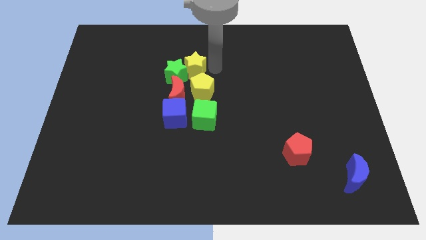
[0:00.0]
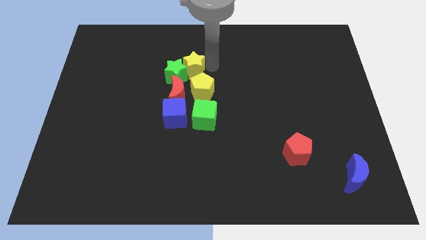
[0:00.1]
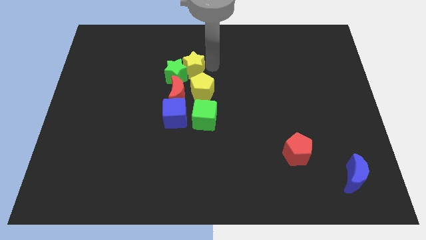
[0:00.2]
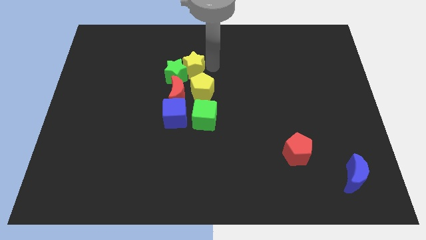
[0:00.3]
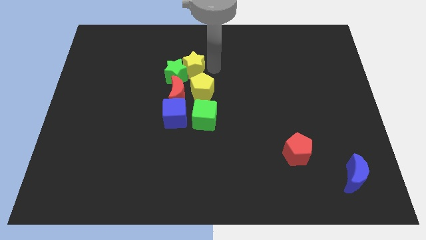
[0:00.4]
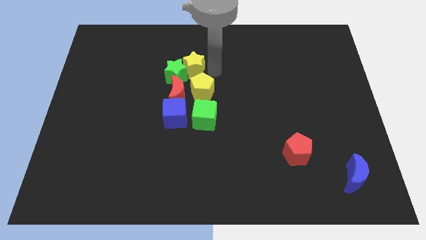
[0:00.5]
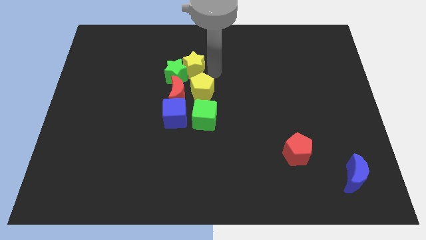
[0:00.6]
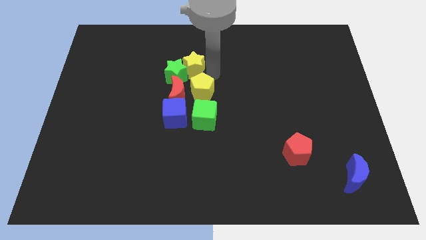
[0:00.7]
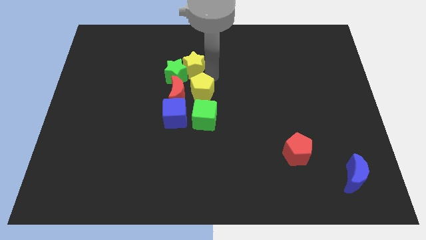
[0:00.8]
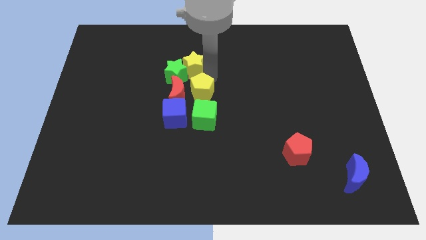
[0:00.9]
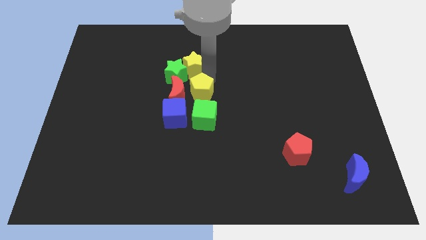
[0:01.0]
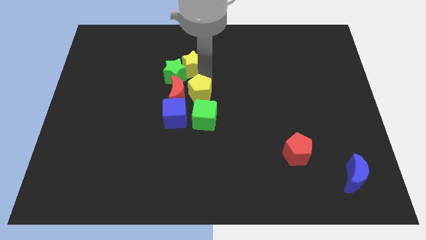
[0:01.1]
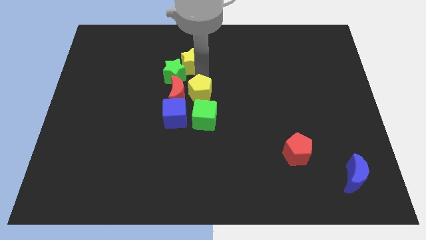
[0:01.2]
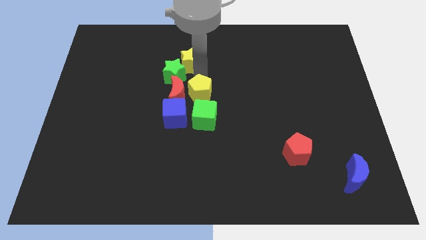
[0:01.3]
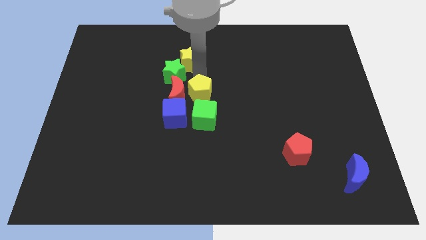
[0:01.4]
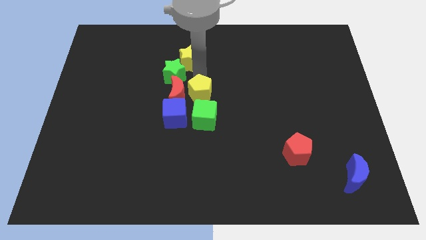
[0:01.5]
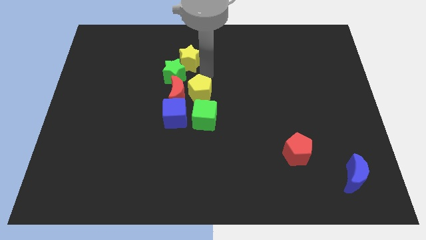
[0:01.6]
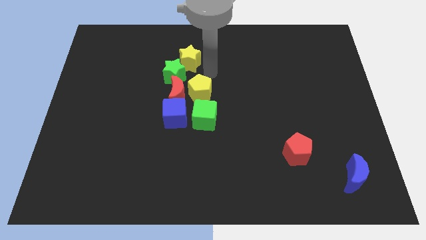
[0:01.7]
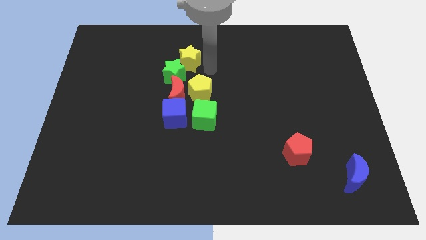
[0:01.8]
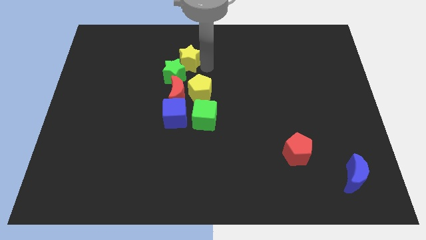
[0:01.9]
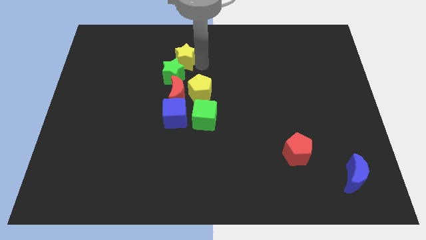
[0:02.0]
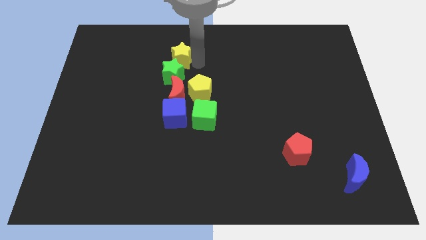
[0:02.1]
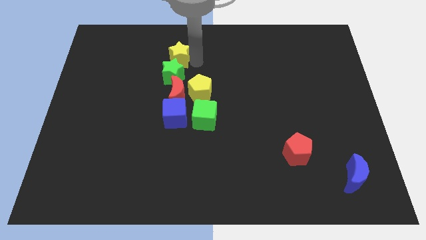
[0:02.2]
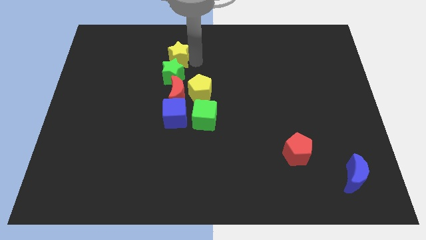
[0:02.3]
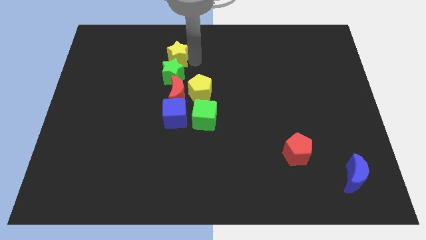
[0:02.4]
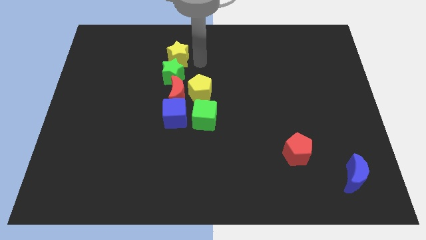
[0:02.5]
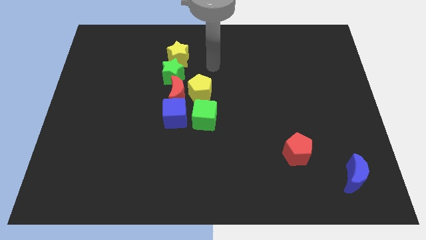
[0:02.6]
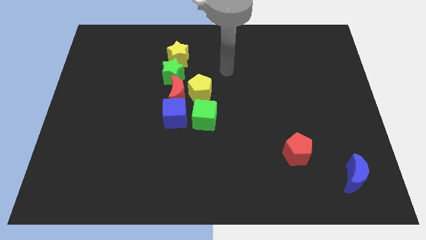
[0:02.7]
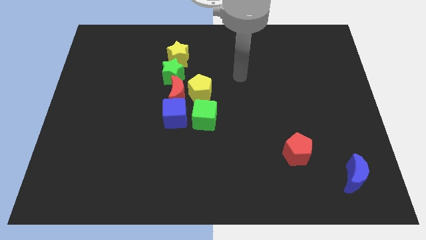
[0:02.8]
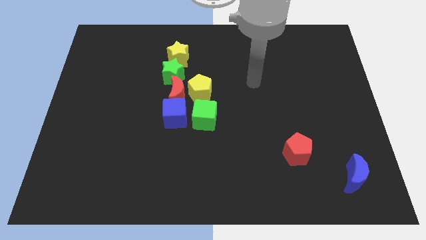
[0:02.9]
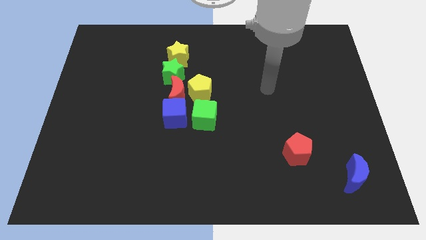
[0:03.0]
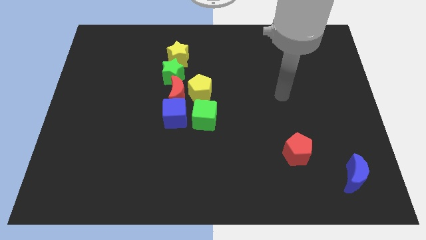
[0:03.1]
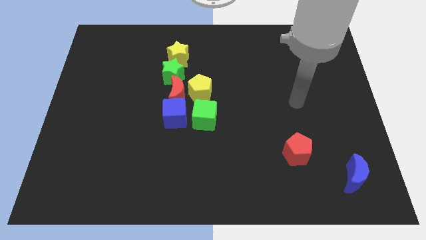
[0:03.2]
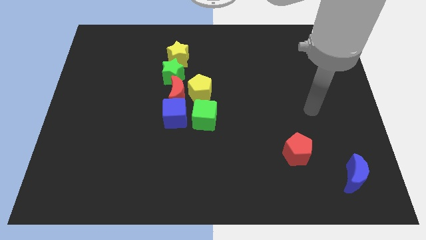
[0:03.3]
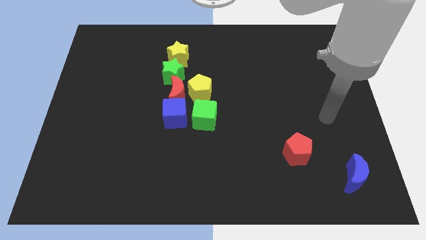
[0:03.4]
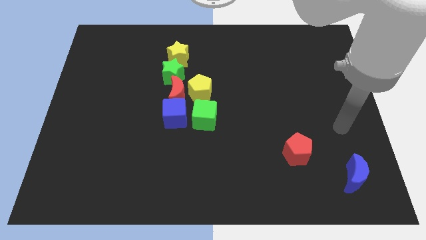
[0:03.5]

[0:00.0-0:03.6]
place the yellow star above the green star

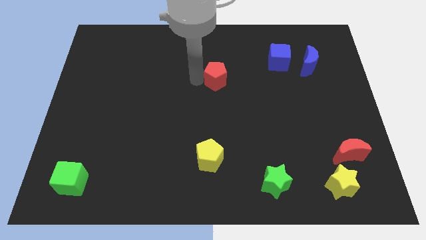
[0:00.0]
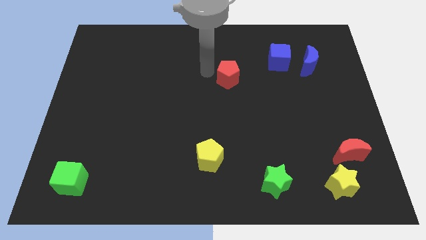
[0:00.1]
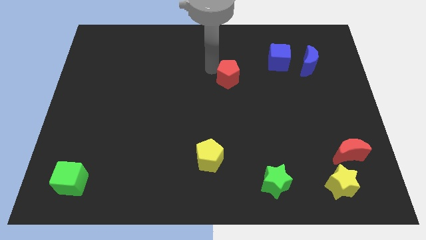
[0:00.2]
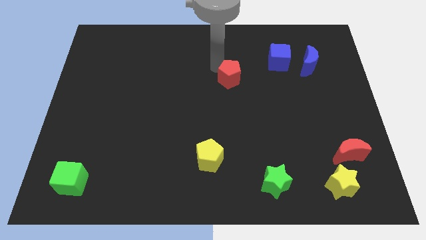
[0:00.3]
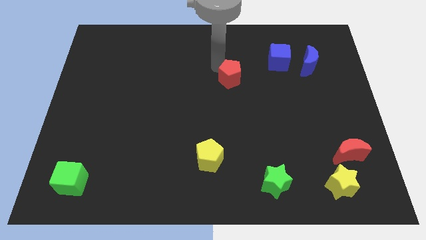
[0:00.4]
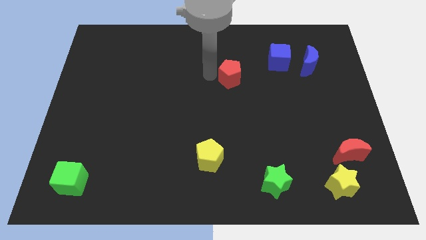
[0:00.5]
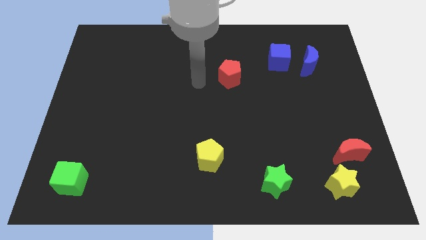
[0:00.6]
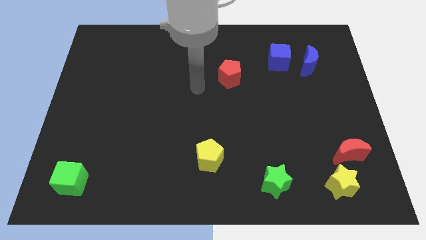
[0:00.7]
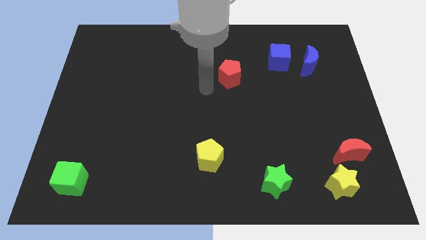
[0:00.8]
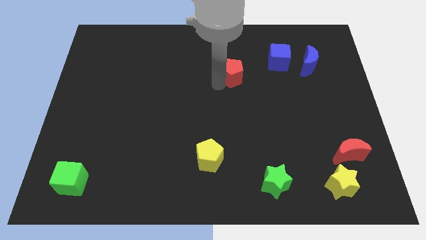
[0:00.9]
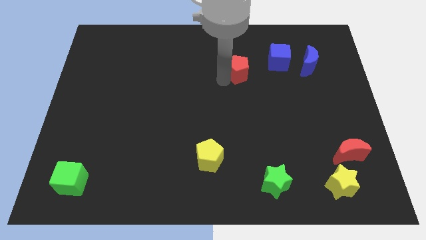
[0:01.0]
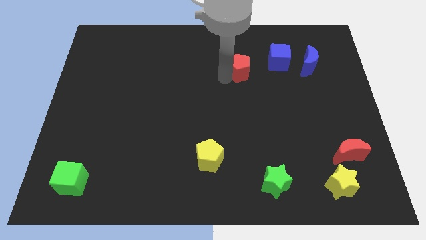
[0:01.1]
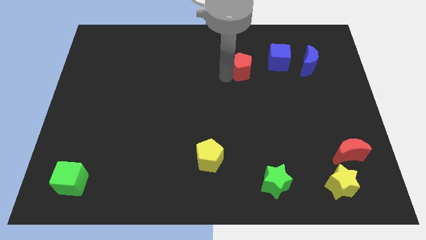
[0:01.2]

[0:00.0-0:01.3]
push the red pentagon close to blue cube

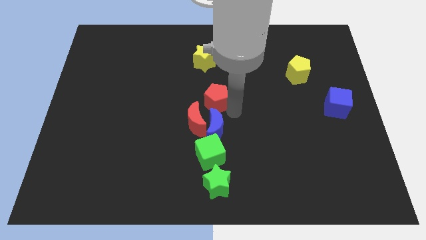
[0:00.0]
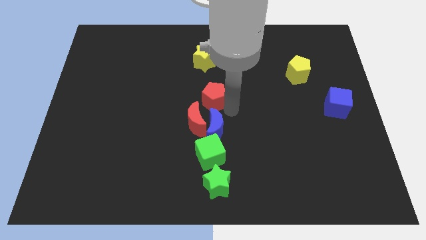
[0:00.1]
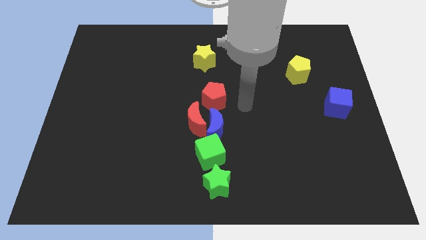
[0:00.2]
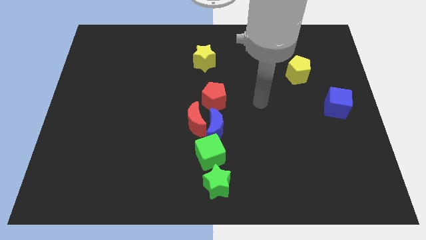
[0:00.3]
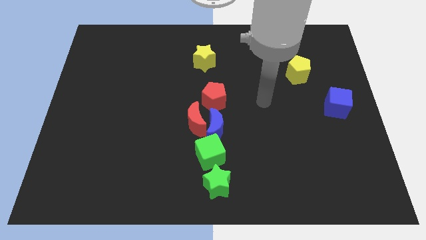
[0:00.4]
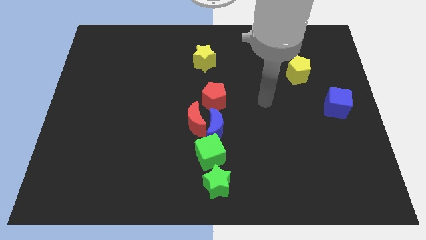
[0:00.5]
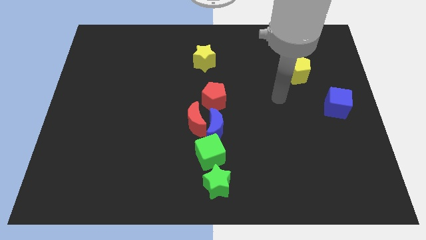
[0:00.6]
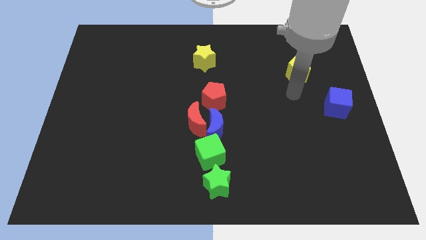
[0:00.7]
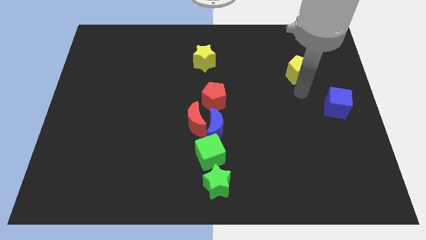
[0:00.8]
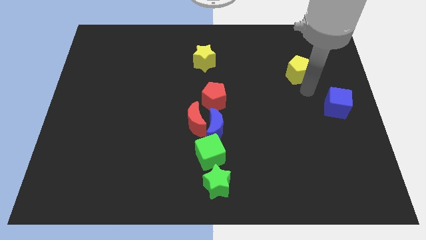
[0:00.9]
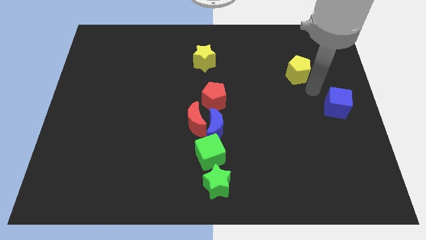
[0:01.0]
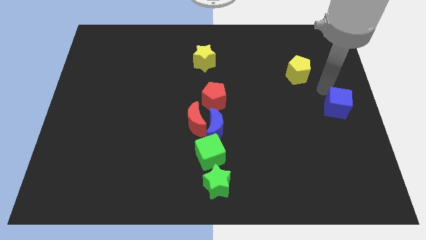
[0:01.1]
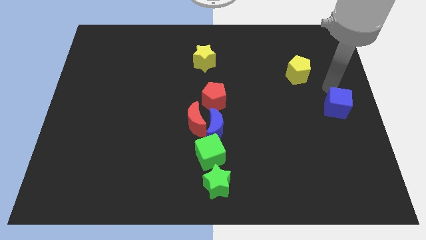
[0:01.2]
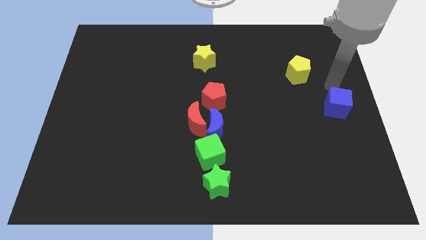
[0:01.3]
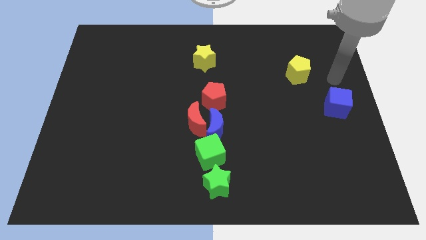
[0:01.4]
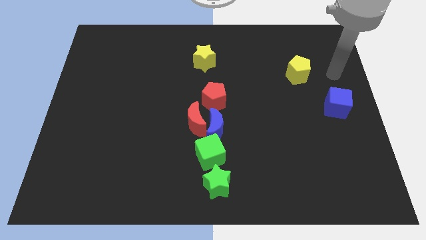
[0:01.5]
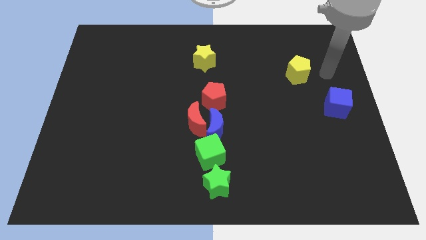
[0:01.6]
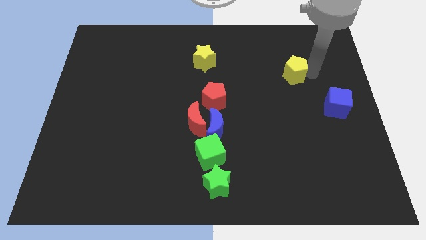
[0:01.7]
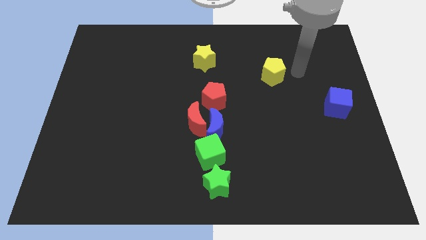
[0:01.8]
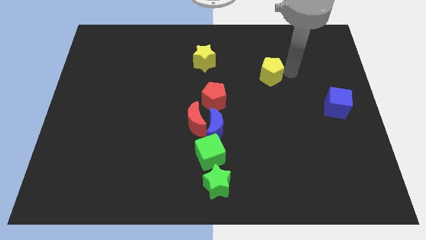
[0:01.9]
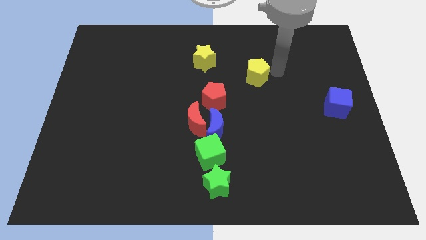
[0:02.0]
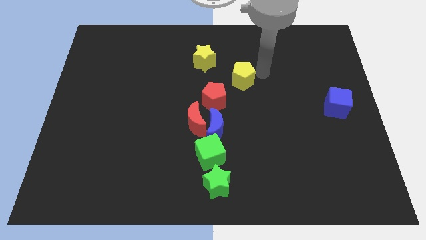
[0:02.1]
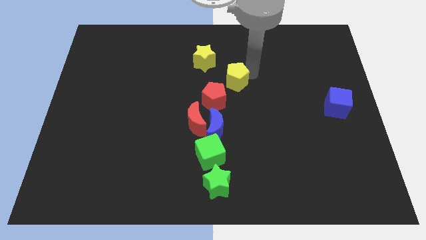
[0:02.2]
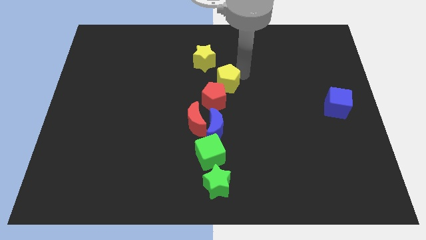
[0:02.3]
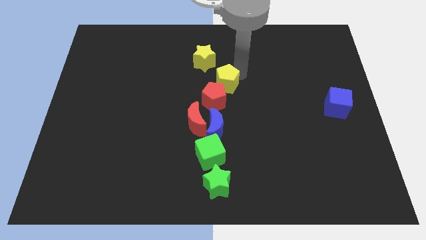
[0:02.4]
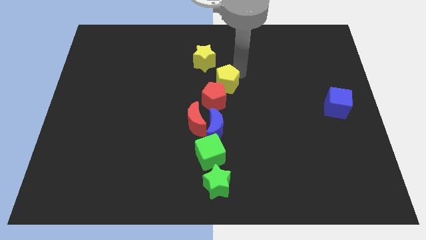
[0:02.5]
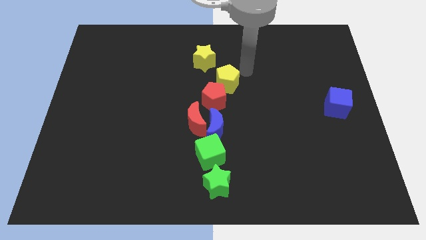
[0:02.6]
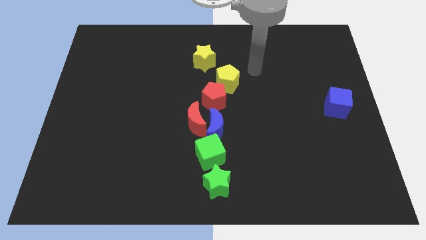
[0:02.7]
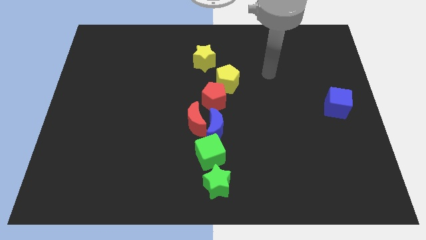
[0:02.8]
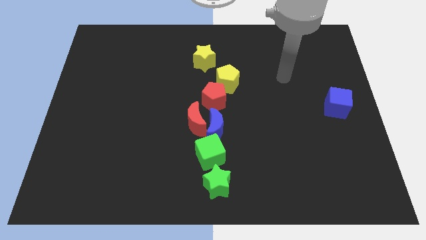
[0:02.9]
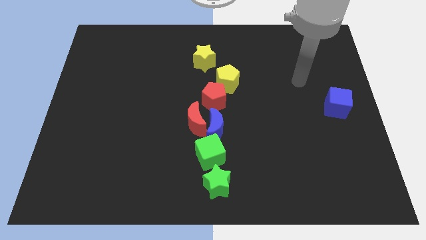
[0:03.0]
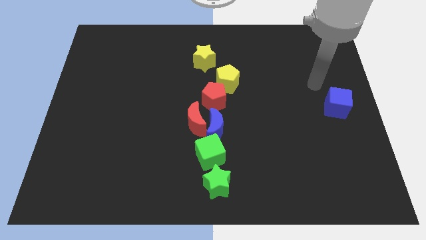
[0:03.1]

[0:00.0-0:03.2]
put the yellow pentagon on the top right side of the red pentagon

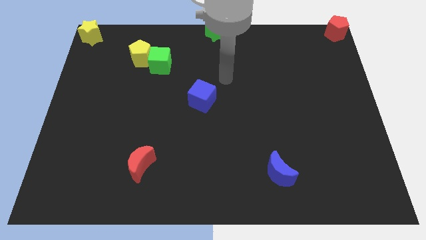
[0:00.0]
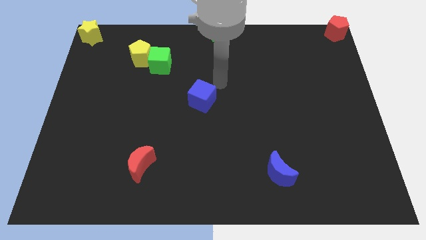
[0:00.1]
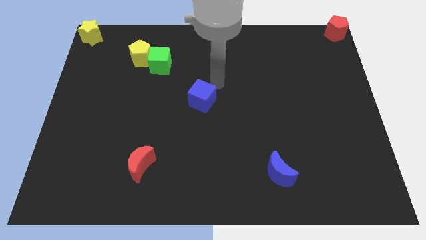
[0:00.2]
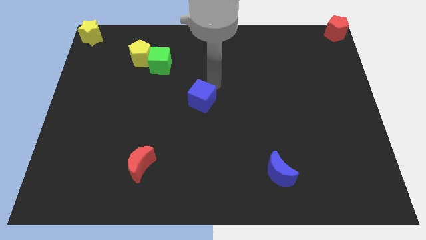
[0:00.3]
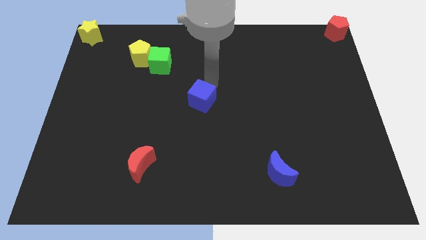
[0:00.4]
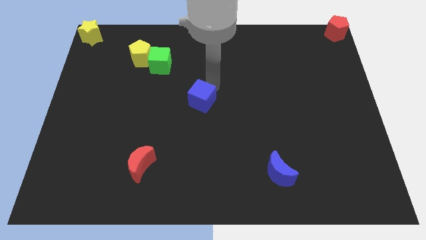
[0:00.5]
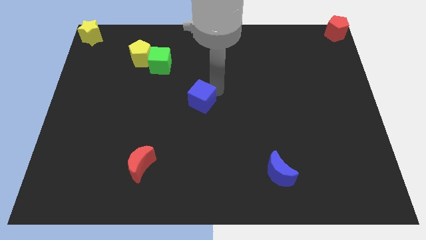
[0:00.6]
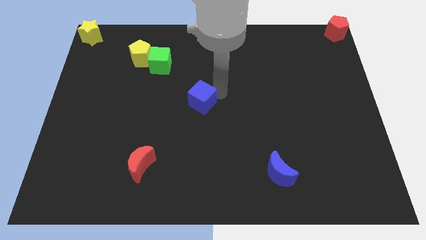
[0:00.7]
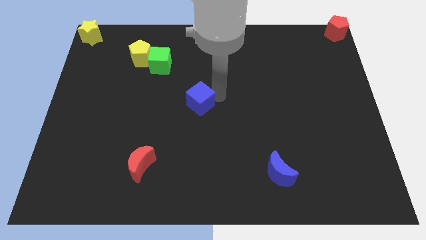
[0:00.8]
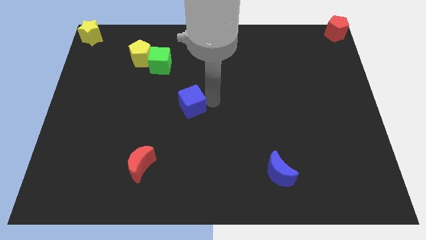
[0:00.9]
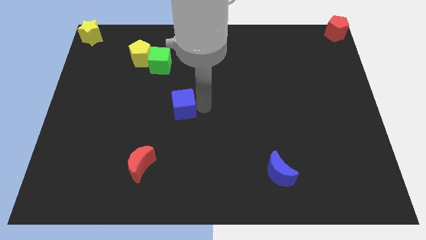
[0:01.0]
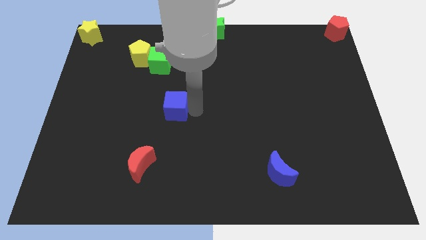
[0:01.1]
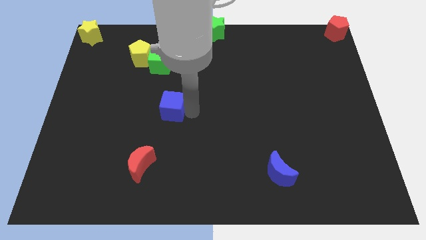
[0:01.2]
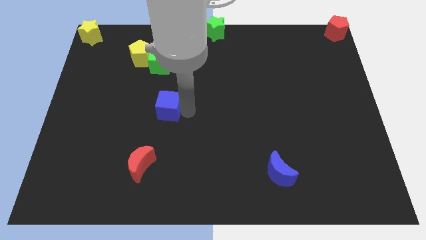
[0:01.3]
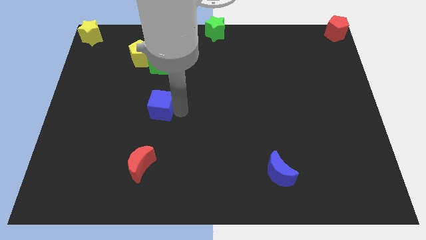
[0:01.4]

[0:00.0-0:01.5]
move the blue cube down to the green cube
